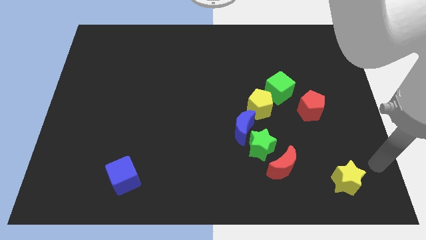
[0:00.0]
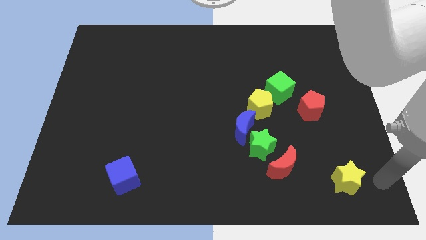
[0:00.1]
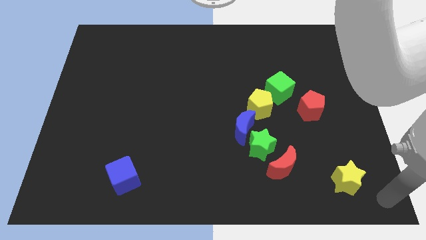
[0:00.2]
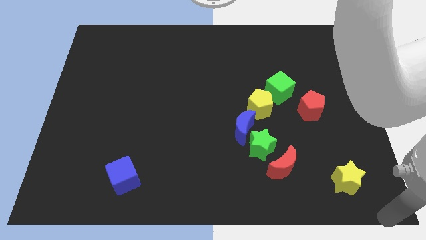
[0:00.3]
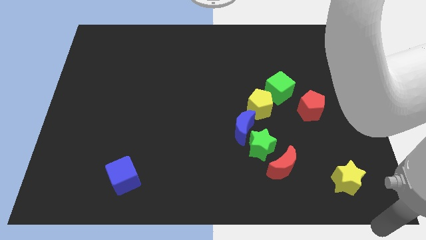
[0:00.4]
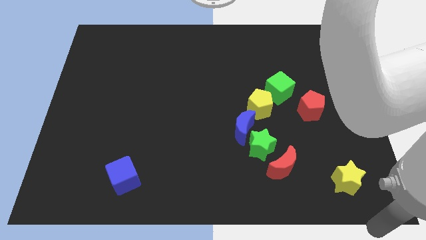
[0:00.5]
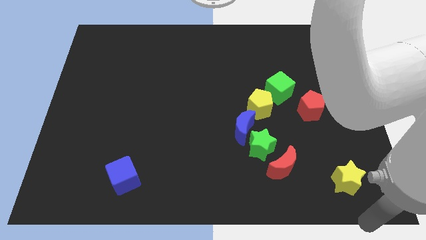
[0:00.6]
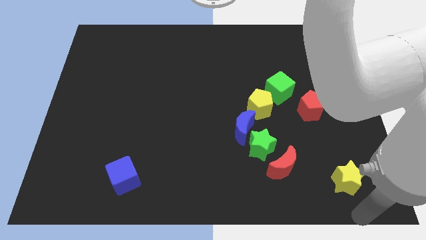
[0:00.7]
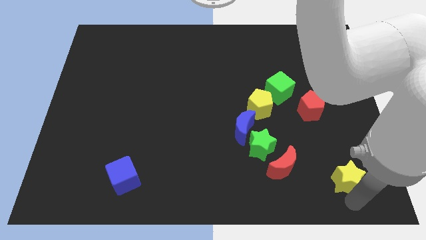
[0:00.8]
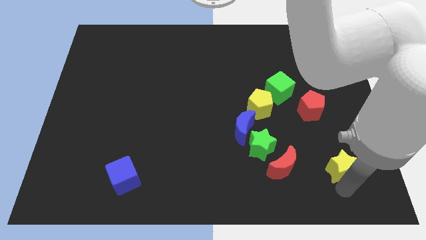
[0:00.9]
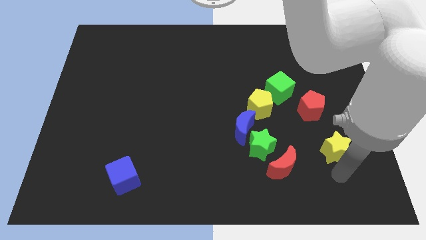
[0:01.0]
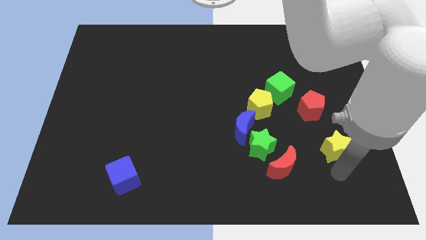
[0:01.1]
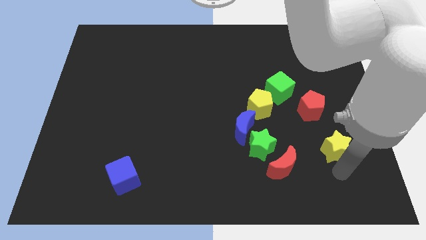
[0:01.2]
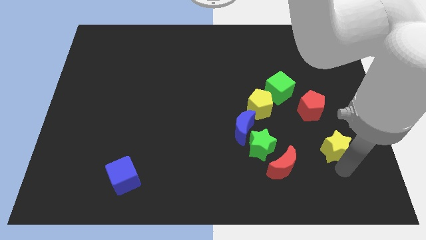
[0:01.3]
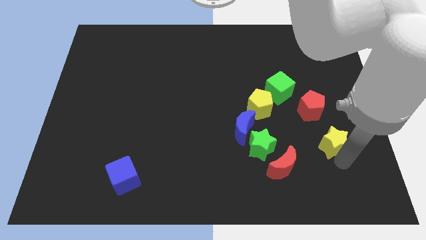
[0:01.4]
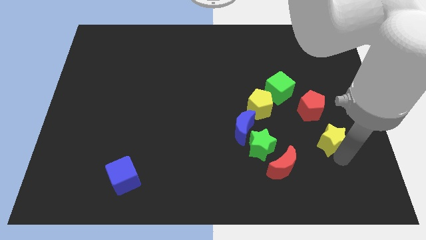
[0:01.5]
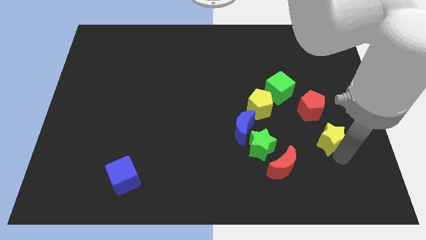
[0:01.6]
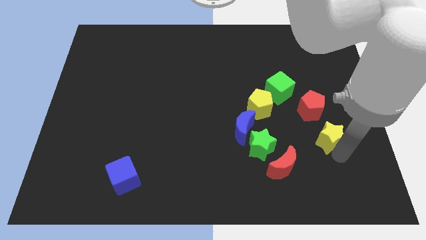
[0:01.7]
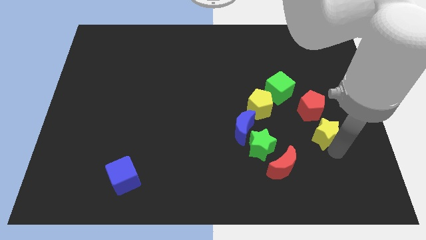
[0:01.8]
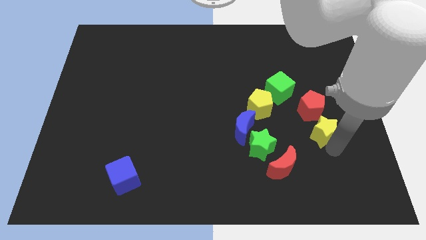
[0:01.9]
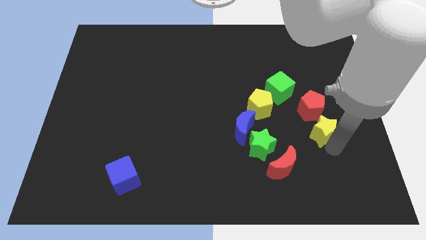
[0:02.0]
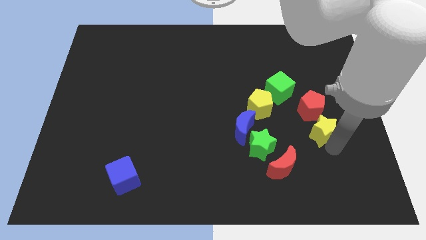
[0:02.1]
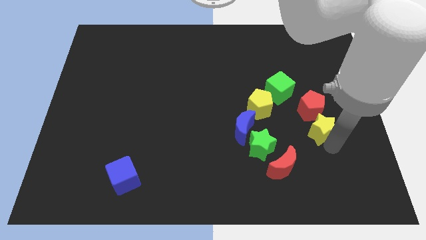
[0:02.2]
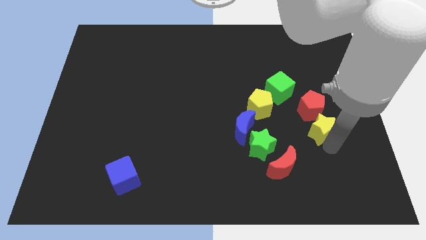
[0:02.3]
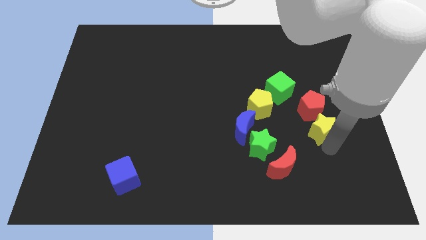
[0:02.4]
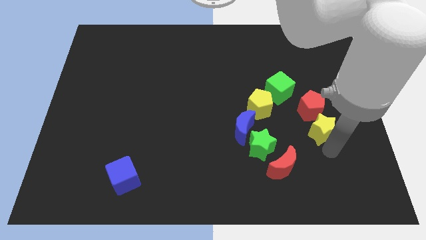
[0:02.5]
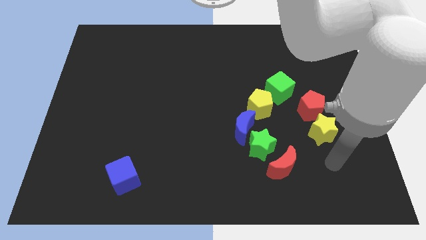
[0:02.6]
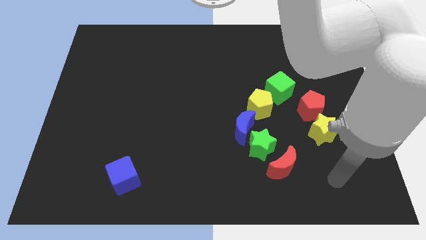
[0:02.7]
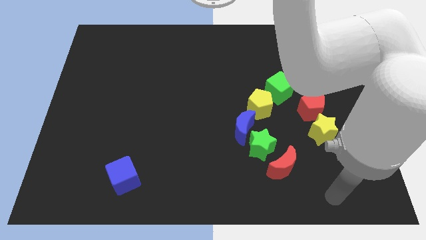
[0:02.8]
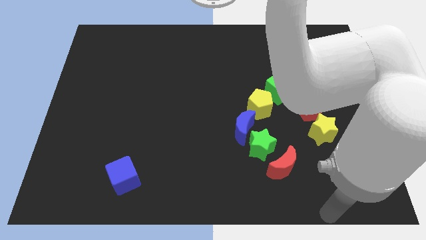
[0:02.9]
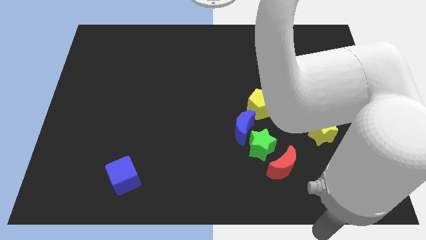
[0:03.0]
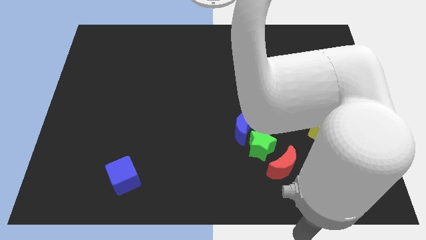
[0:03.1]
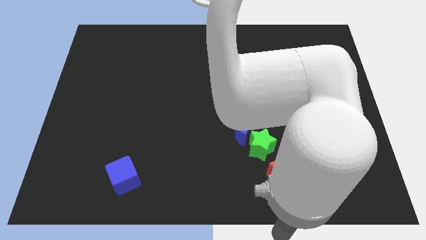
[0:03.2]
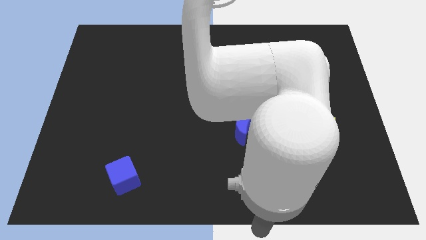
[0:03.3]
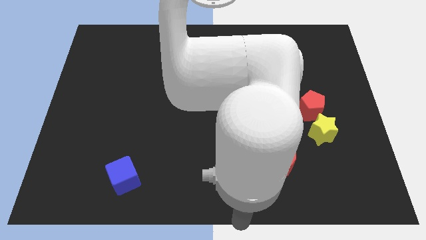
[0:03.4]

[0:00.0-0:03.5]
slide the yellow star below the red pentagon

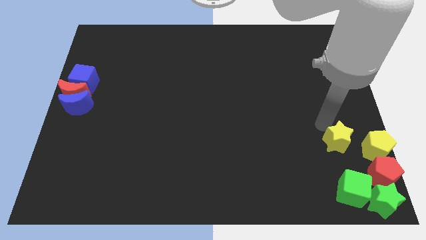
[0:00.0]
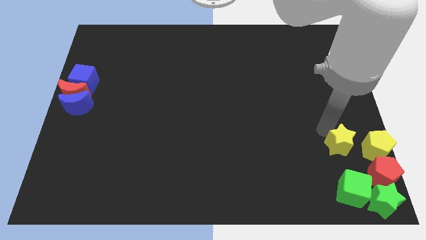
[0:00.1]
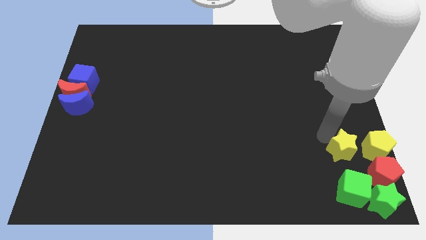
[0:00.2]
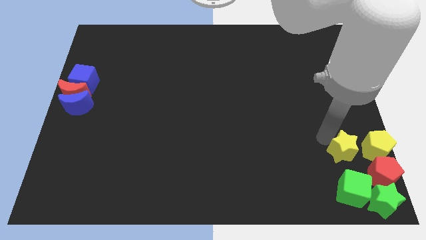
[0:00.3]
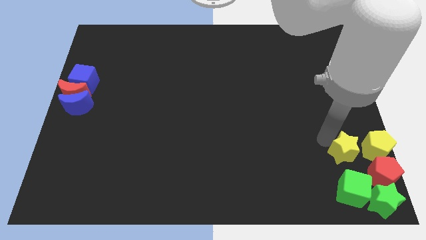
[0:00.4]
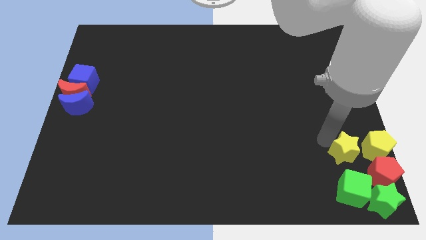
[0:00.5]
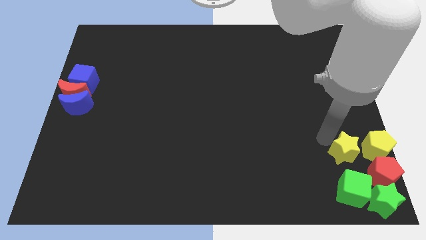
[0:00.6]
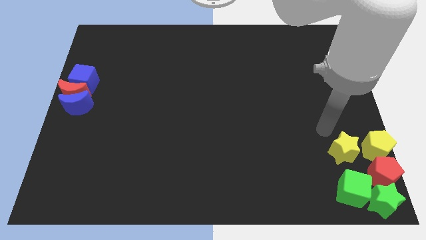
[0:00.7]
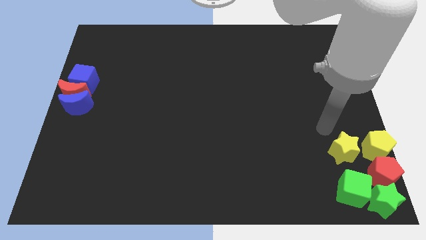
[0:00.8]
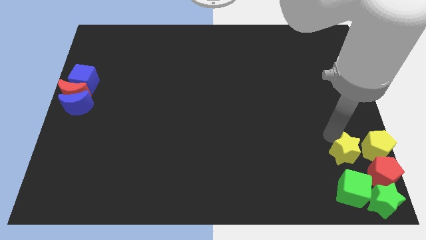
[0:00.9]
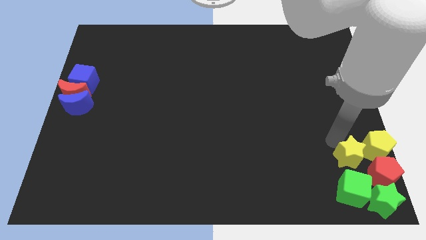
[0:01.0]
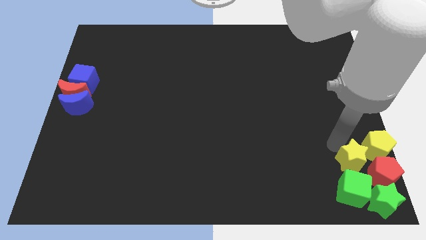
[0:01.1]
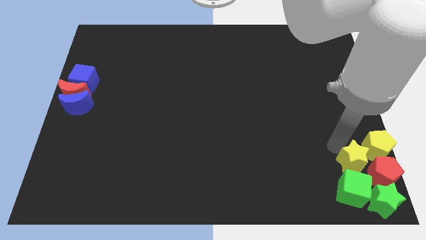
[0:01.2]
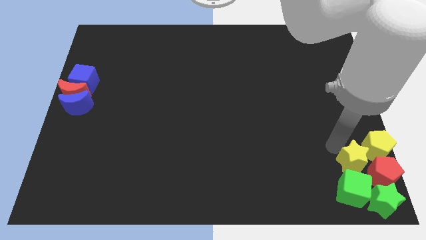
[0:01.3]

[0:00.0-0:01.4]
move the yellow star above the green cube

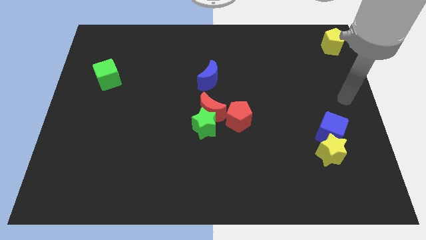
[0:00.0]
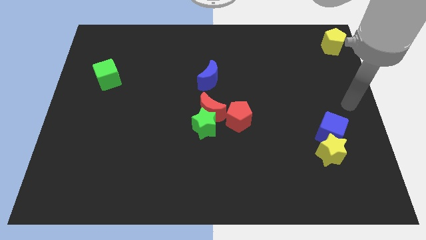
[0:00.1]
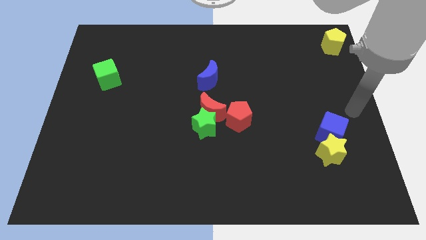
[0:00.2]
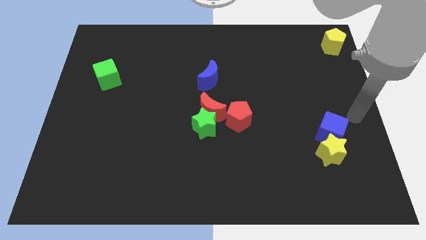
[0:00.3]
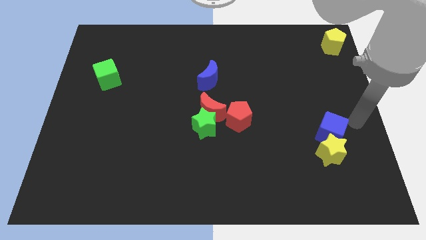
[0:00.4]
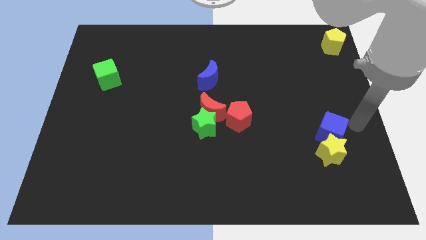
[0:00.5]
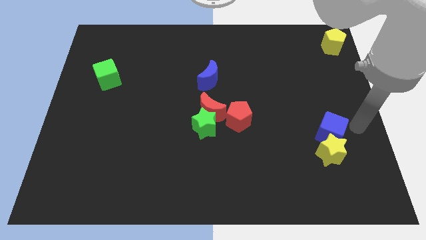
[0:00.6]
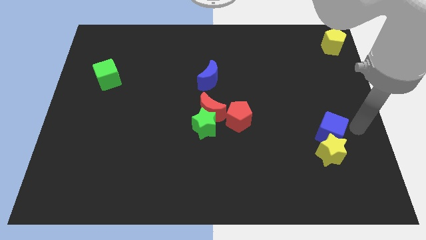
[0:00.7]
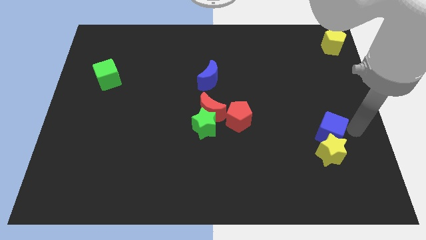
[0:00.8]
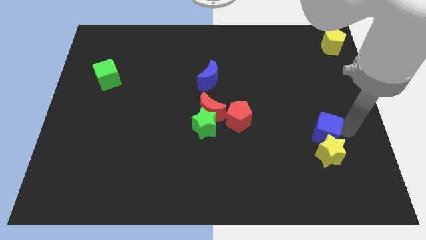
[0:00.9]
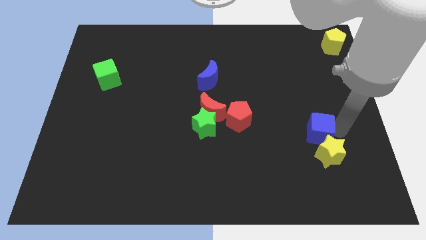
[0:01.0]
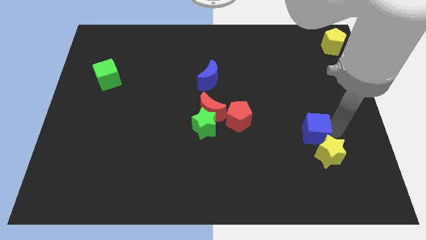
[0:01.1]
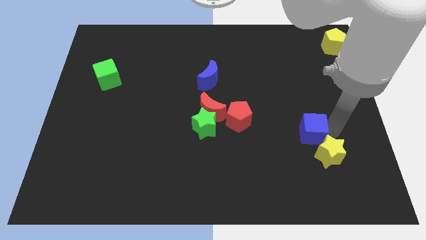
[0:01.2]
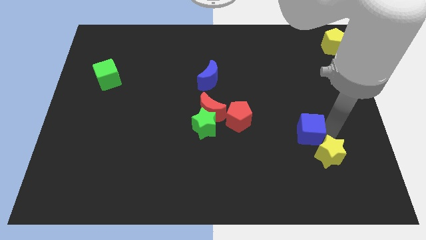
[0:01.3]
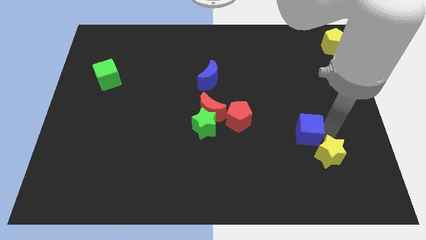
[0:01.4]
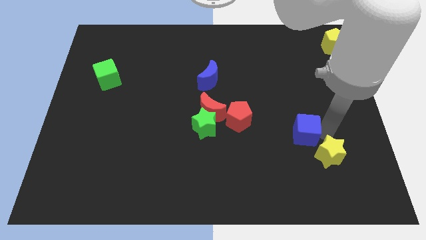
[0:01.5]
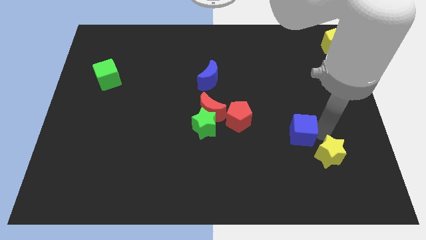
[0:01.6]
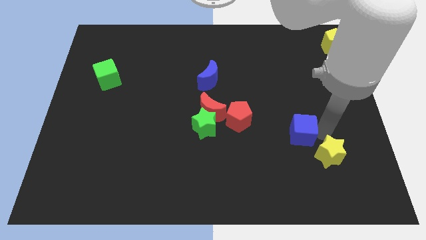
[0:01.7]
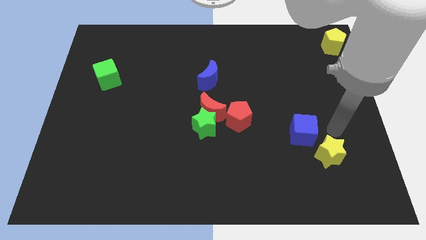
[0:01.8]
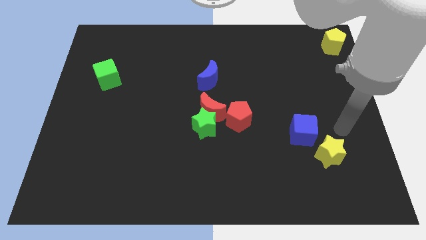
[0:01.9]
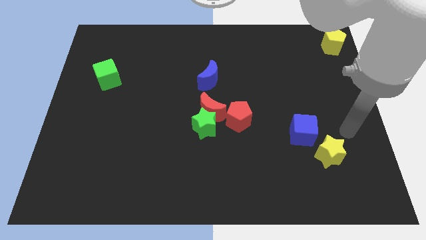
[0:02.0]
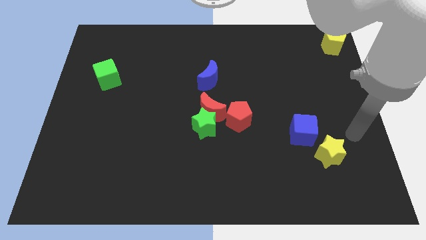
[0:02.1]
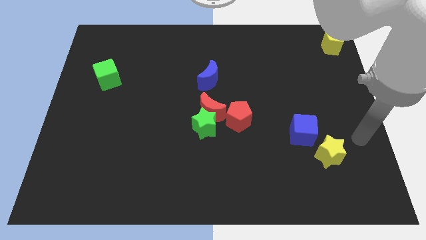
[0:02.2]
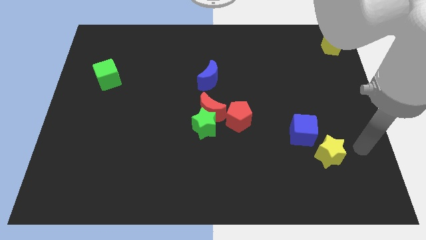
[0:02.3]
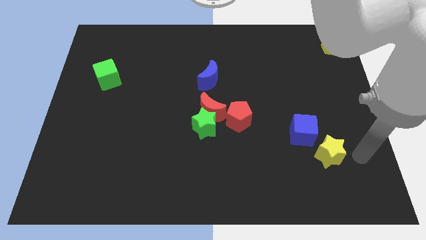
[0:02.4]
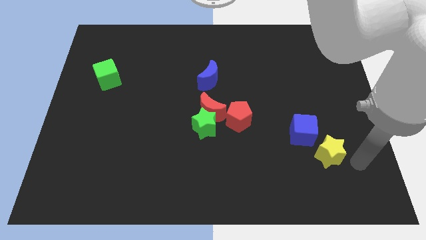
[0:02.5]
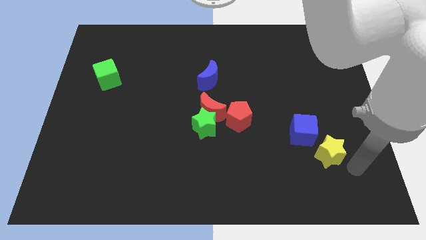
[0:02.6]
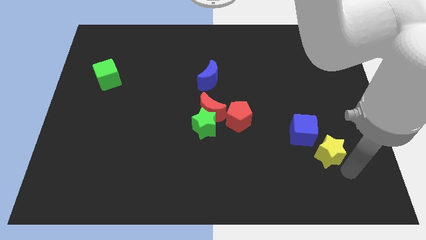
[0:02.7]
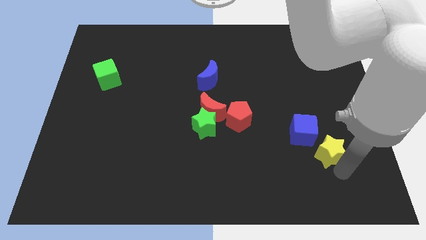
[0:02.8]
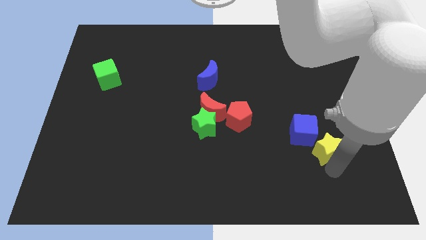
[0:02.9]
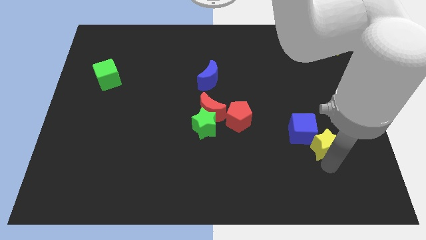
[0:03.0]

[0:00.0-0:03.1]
separate the blue cube from yellow star

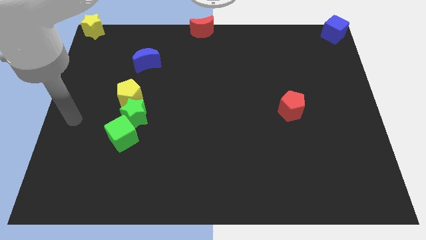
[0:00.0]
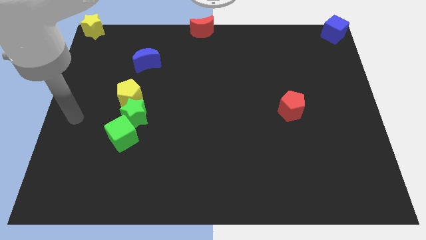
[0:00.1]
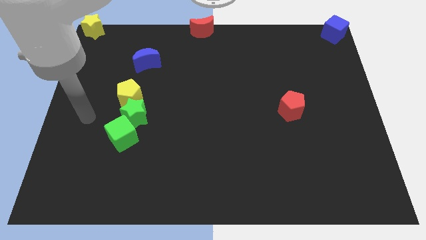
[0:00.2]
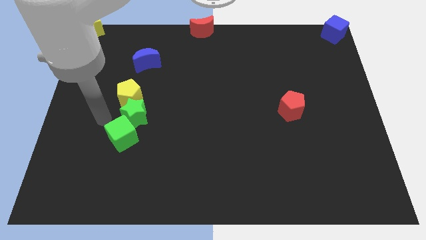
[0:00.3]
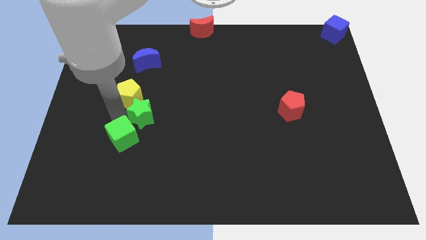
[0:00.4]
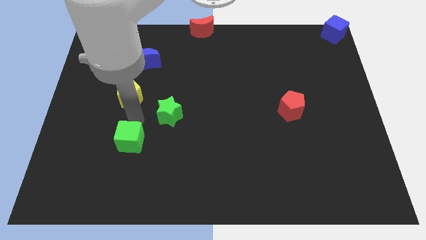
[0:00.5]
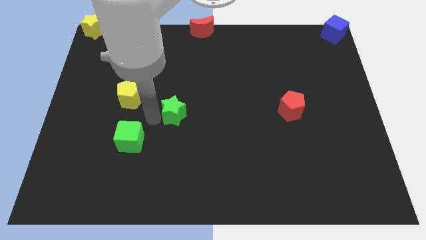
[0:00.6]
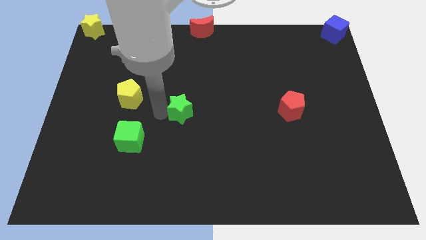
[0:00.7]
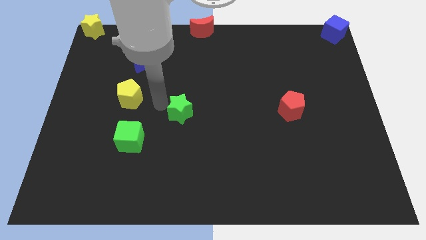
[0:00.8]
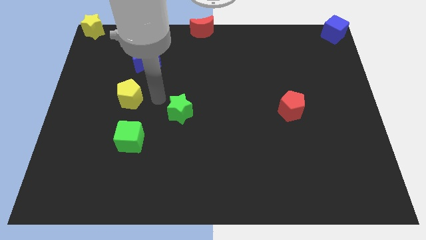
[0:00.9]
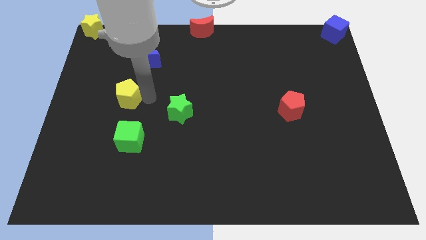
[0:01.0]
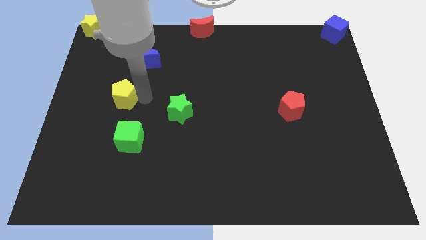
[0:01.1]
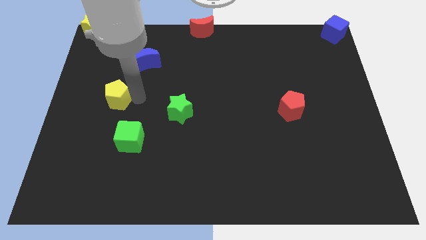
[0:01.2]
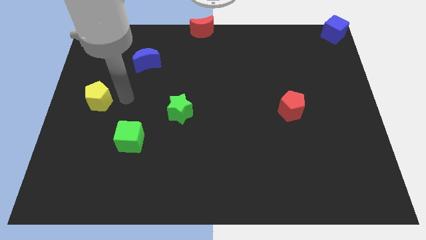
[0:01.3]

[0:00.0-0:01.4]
separate the green blocks and the yellow pentagon
